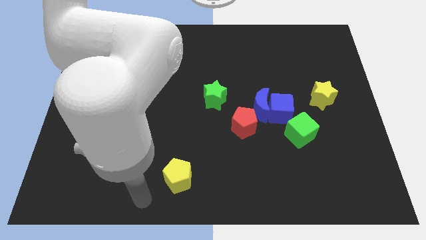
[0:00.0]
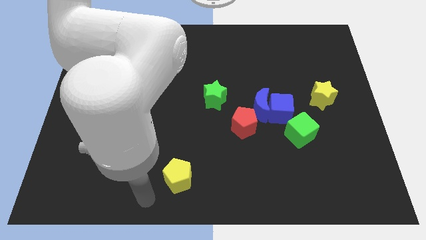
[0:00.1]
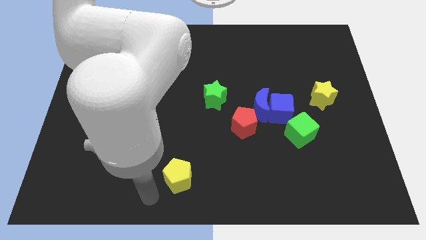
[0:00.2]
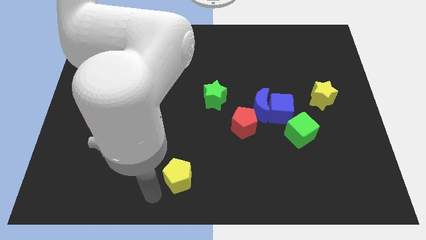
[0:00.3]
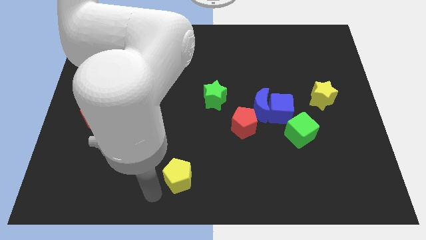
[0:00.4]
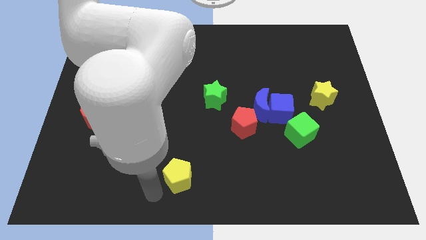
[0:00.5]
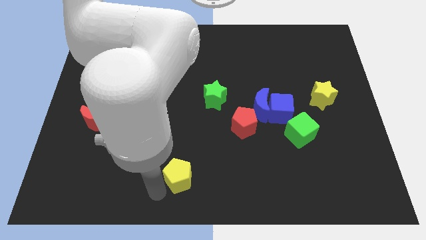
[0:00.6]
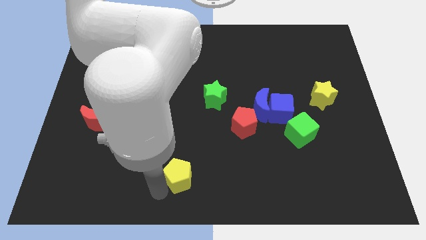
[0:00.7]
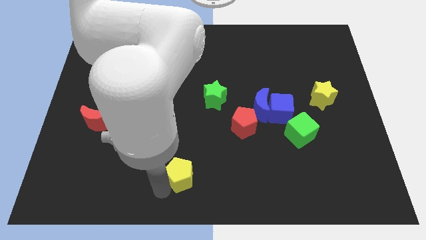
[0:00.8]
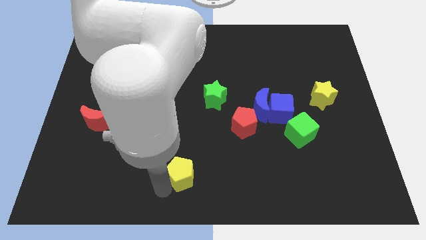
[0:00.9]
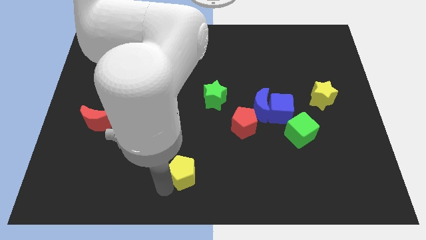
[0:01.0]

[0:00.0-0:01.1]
tap on the bottom left side of yellow pentagon

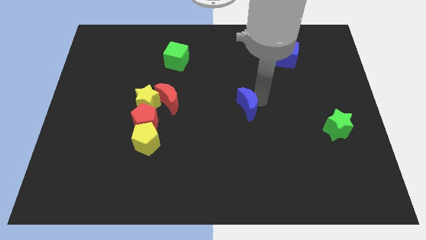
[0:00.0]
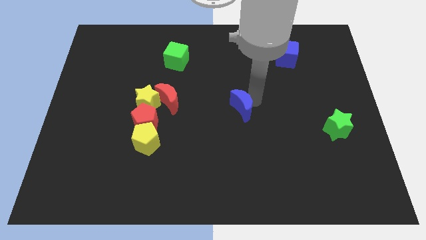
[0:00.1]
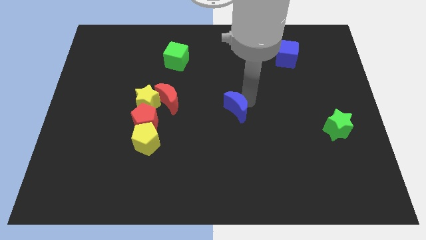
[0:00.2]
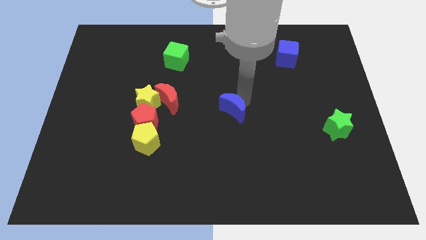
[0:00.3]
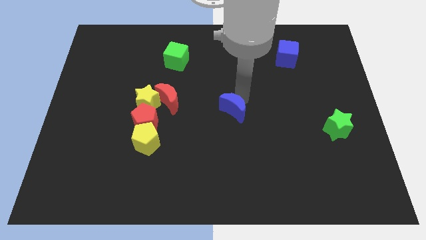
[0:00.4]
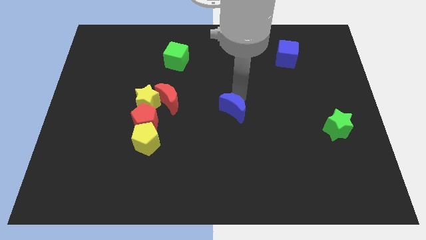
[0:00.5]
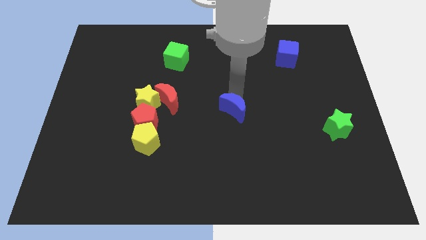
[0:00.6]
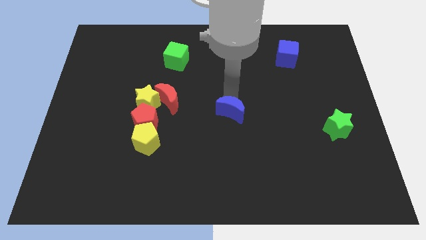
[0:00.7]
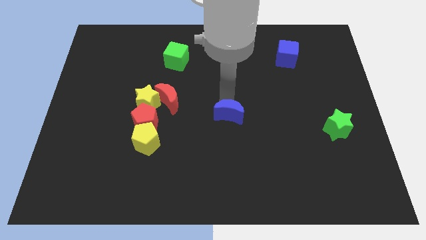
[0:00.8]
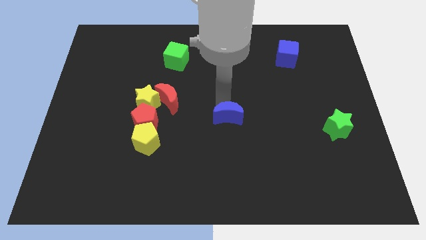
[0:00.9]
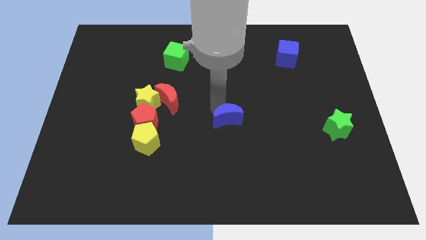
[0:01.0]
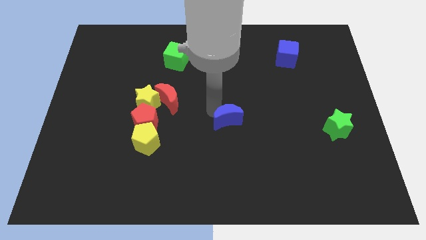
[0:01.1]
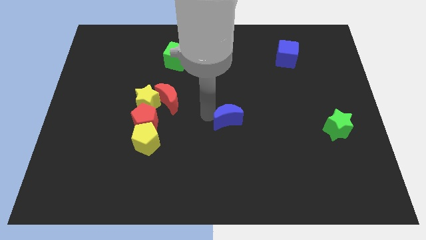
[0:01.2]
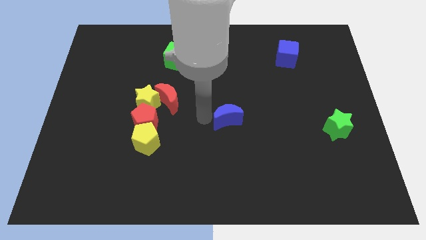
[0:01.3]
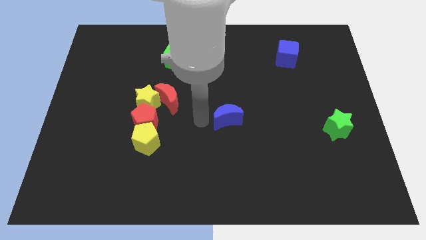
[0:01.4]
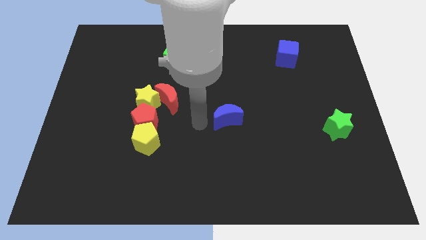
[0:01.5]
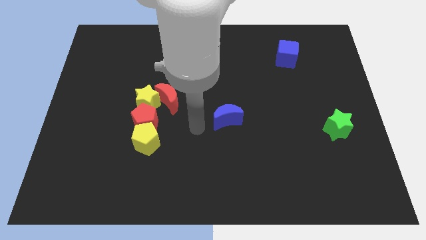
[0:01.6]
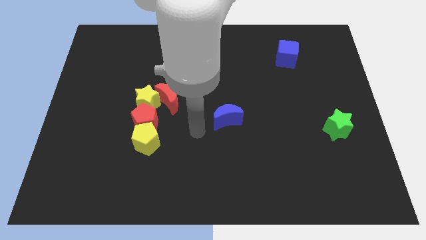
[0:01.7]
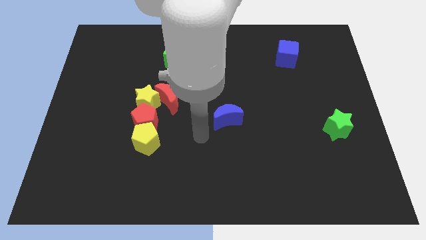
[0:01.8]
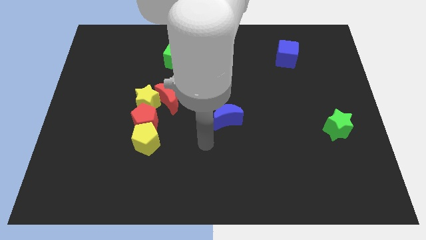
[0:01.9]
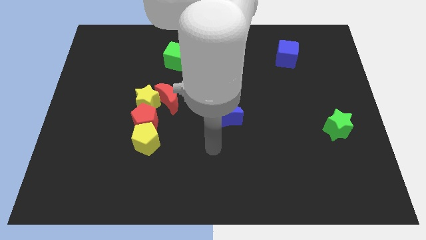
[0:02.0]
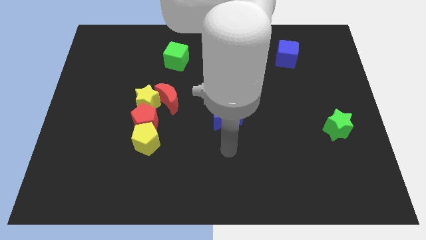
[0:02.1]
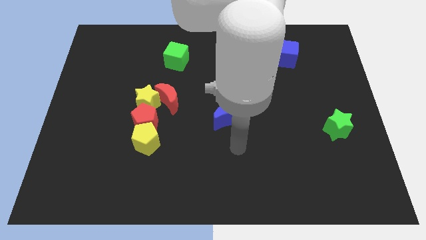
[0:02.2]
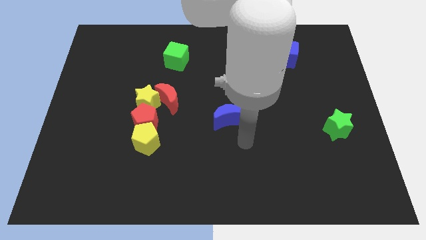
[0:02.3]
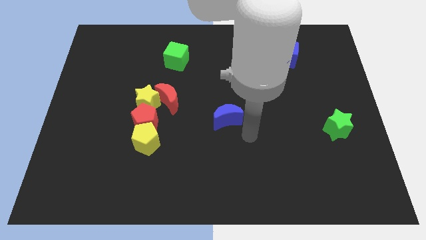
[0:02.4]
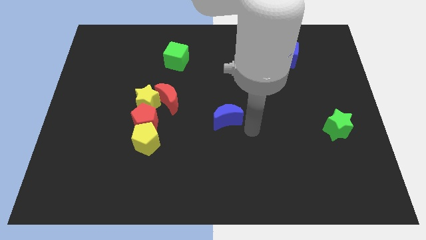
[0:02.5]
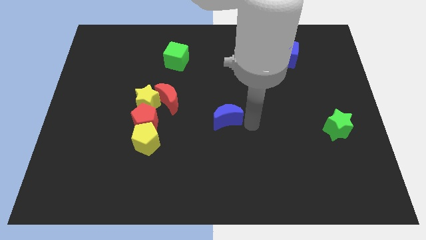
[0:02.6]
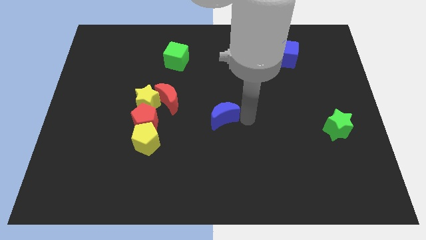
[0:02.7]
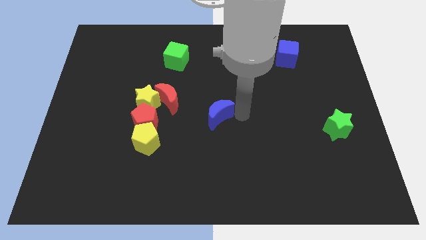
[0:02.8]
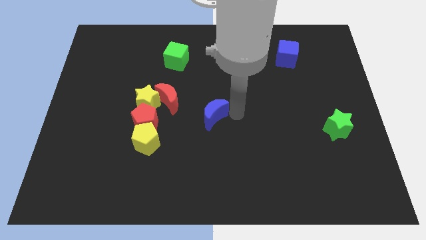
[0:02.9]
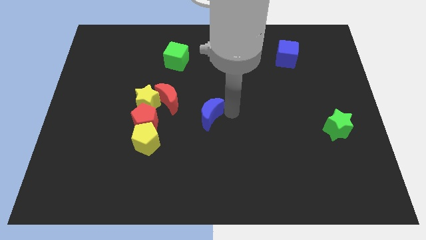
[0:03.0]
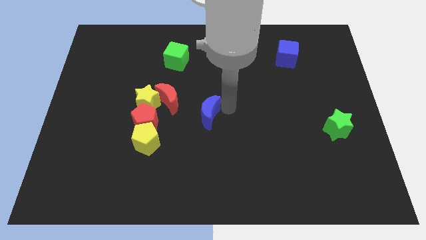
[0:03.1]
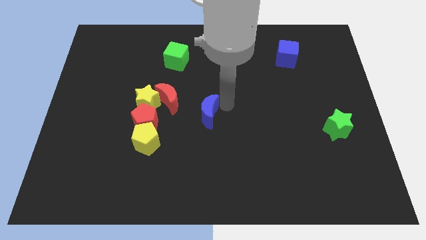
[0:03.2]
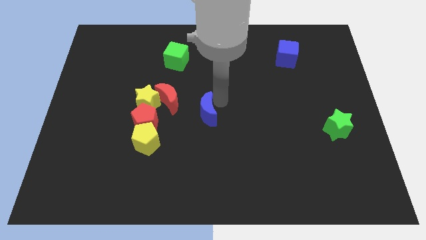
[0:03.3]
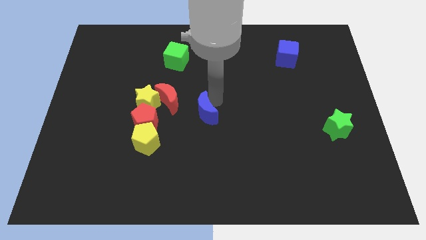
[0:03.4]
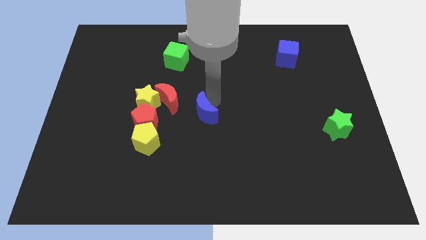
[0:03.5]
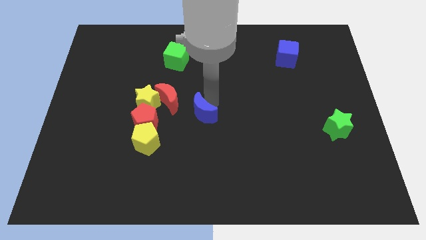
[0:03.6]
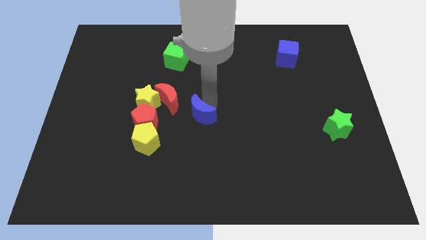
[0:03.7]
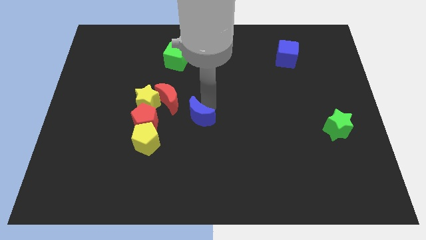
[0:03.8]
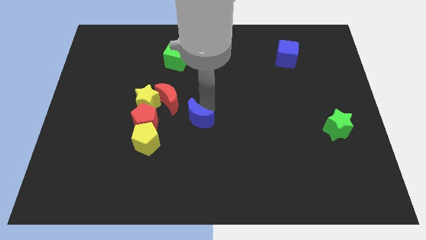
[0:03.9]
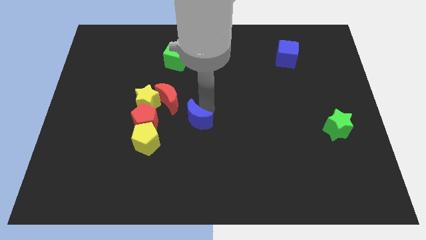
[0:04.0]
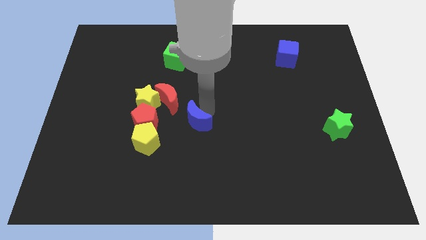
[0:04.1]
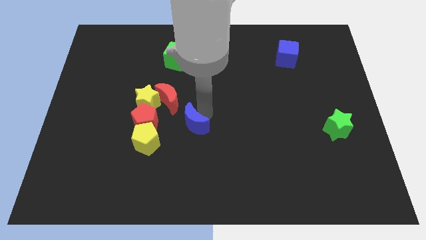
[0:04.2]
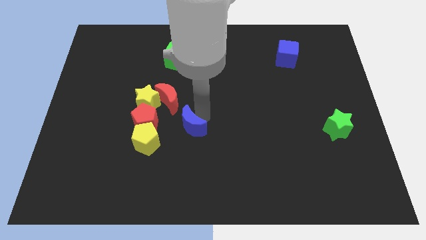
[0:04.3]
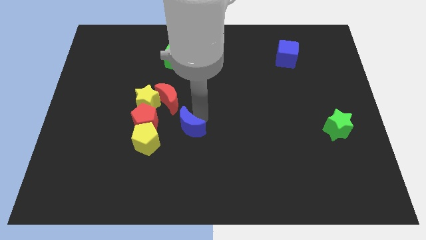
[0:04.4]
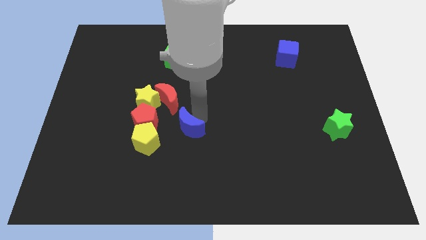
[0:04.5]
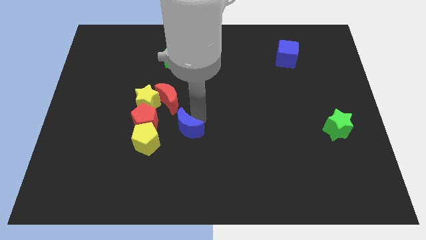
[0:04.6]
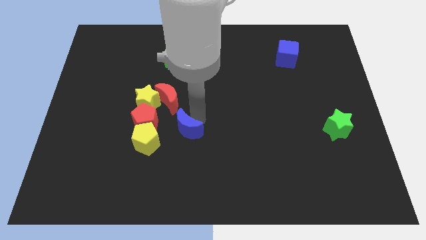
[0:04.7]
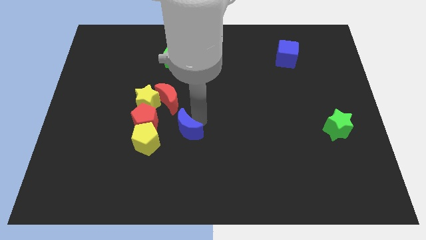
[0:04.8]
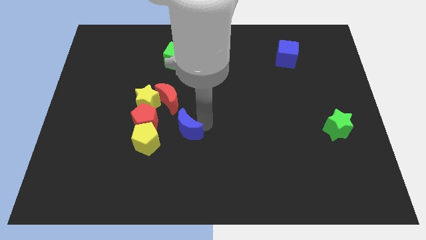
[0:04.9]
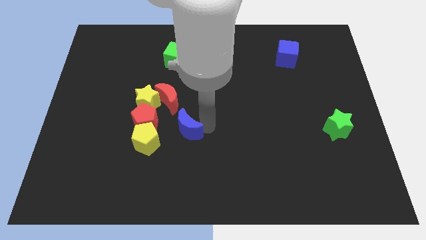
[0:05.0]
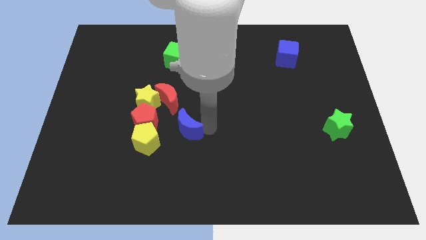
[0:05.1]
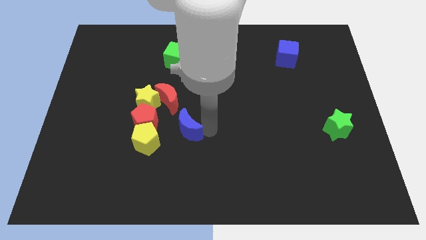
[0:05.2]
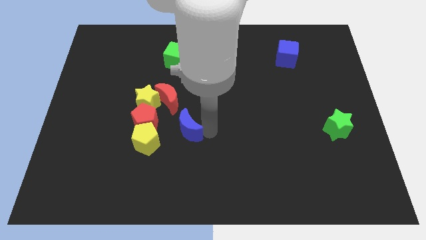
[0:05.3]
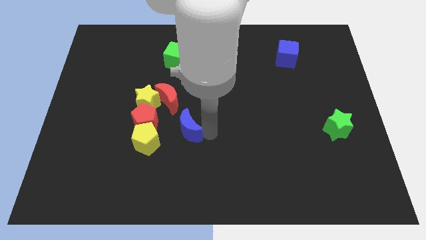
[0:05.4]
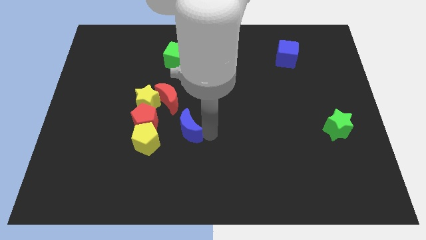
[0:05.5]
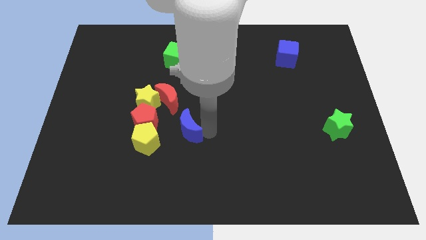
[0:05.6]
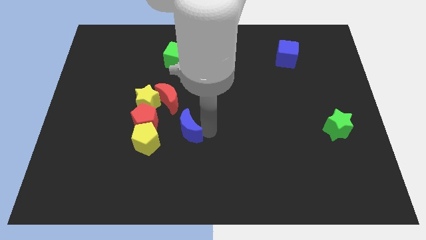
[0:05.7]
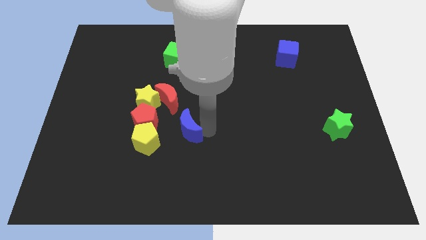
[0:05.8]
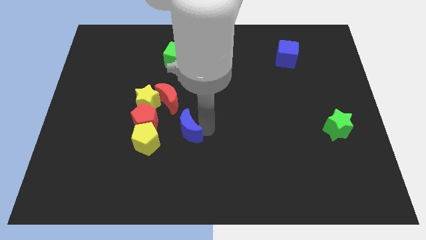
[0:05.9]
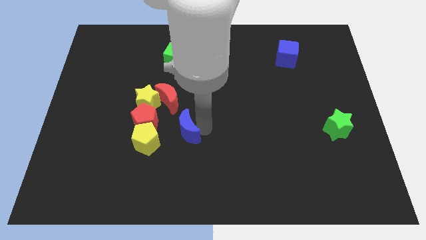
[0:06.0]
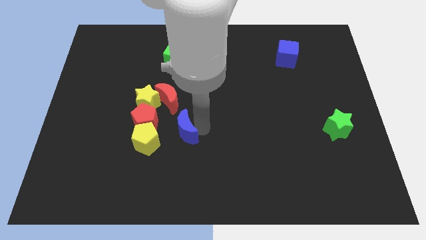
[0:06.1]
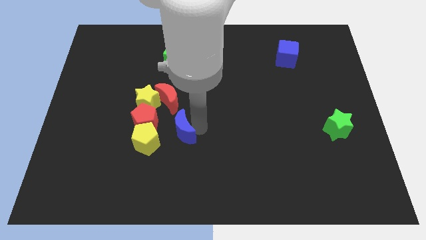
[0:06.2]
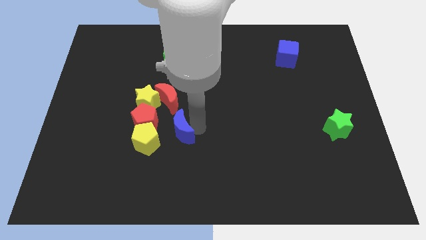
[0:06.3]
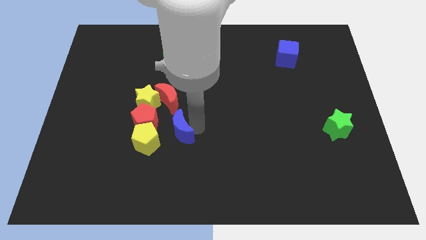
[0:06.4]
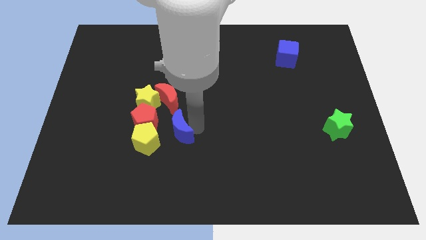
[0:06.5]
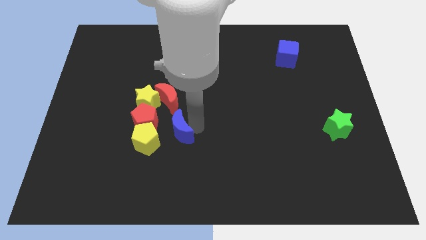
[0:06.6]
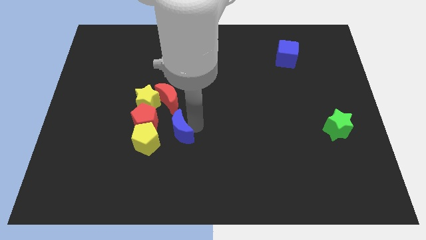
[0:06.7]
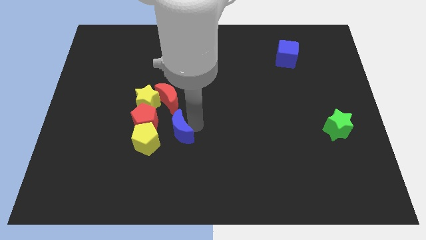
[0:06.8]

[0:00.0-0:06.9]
move the blue moon towards the yellow pentagon

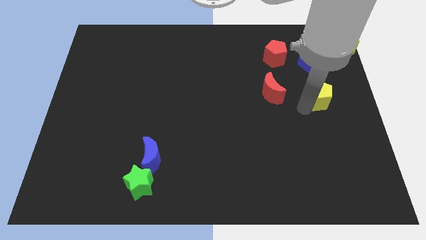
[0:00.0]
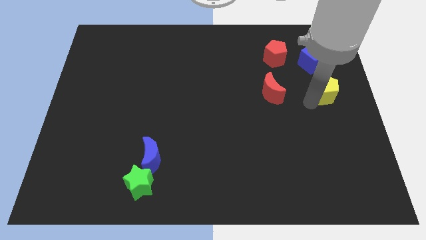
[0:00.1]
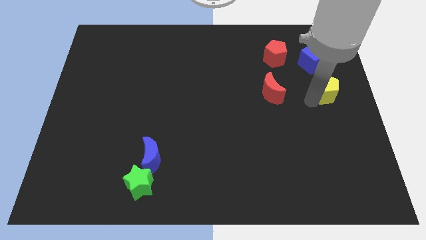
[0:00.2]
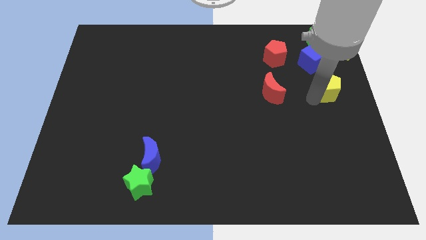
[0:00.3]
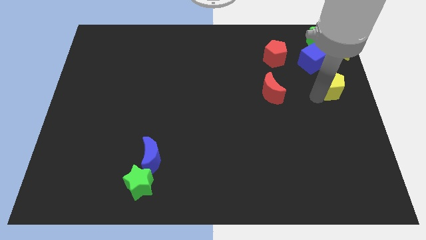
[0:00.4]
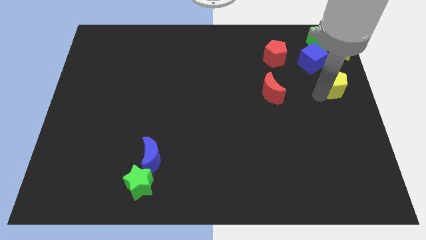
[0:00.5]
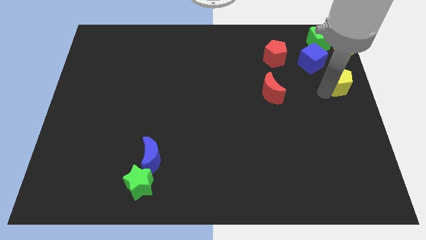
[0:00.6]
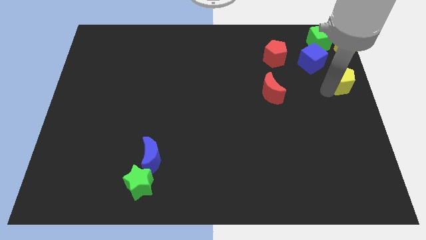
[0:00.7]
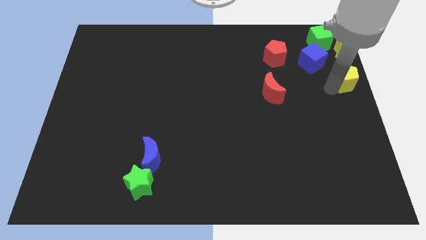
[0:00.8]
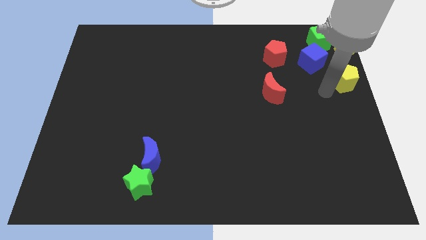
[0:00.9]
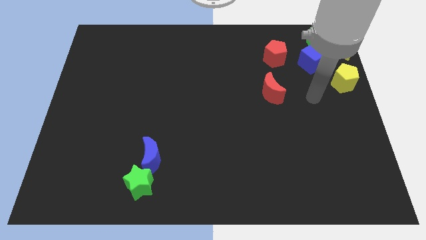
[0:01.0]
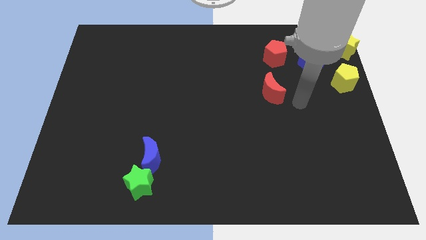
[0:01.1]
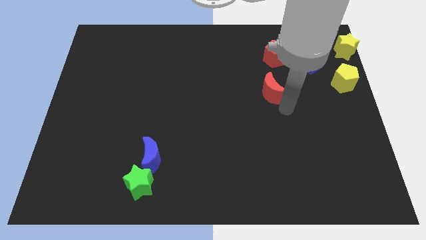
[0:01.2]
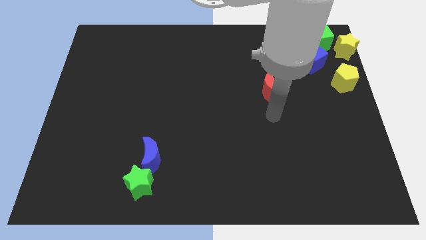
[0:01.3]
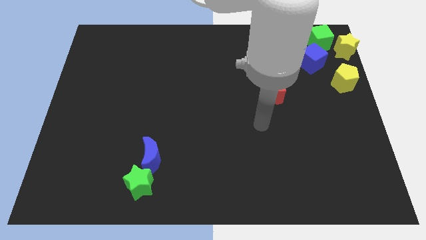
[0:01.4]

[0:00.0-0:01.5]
push the yellow pentagon close to the yellow star
